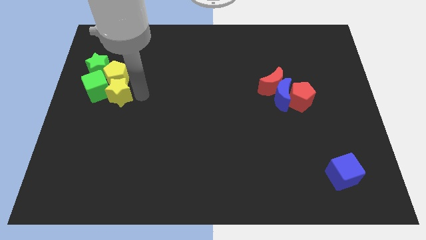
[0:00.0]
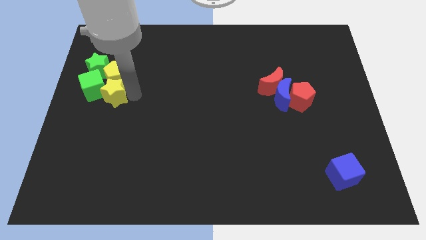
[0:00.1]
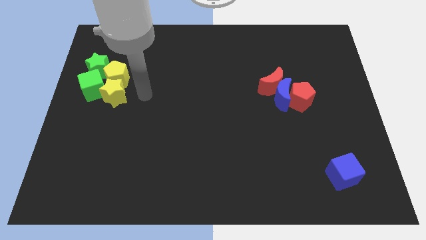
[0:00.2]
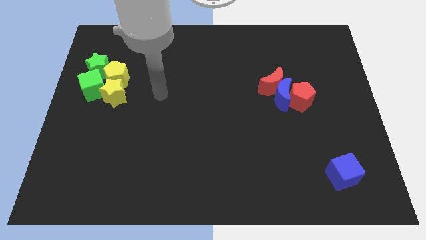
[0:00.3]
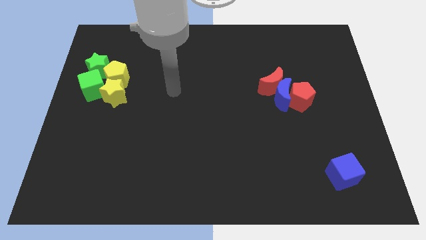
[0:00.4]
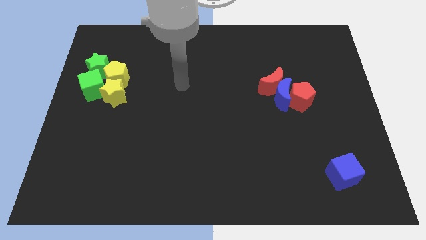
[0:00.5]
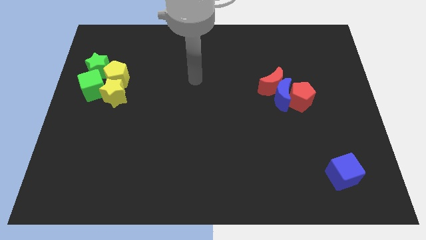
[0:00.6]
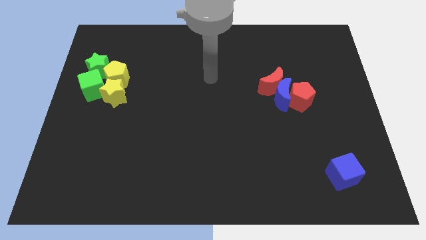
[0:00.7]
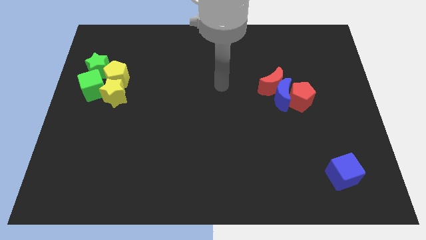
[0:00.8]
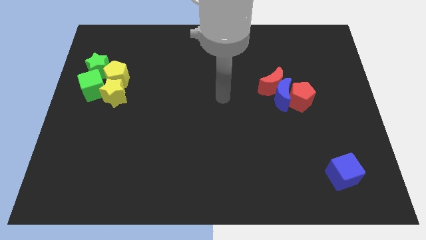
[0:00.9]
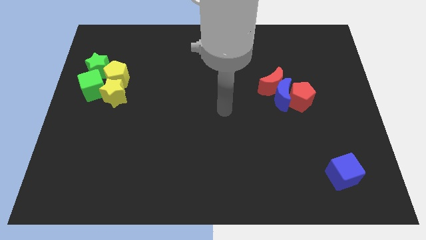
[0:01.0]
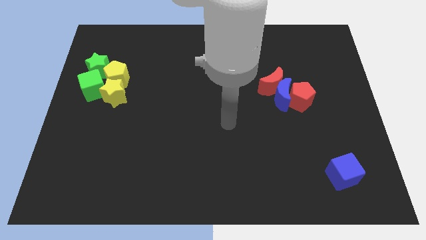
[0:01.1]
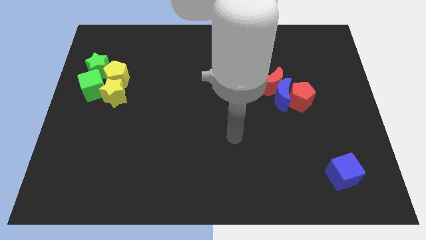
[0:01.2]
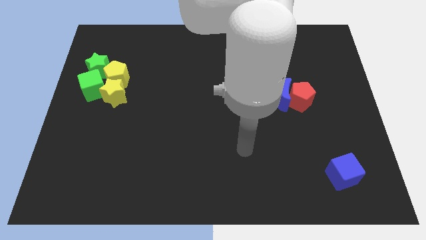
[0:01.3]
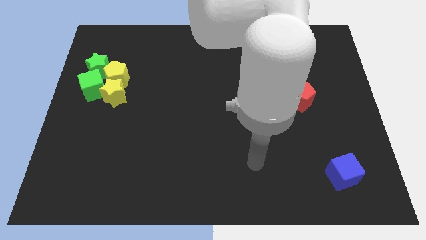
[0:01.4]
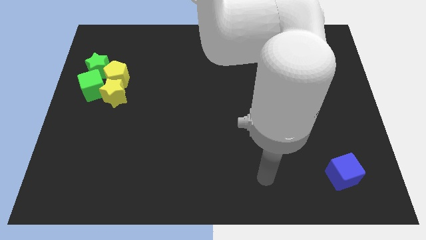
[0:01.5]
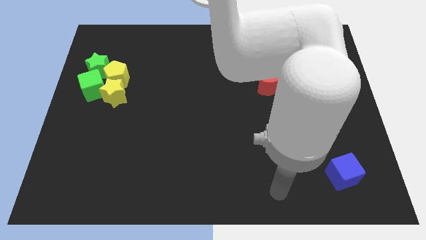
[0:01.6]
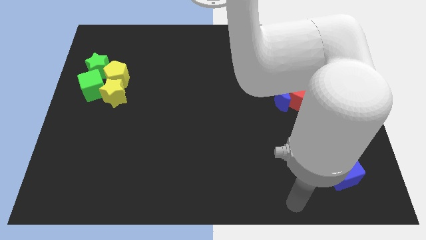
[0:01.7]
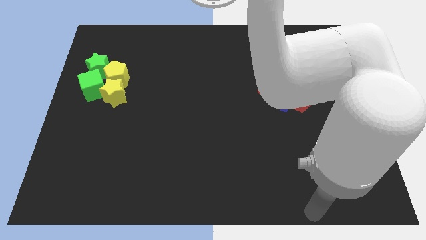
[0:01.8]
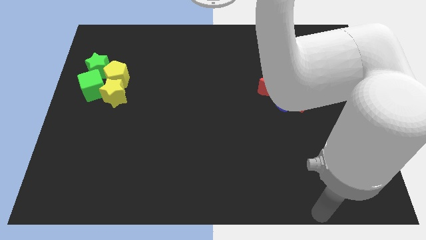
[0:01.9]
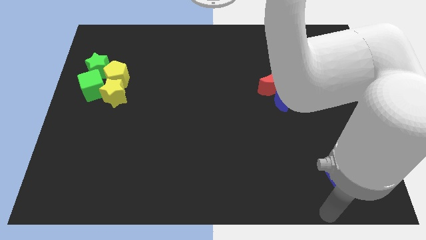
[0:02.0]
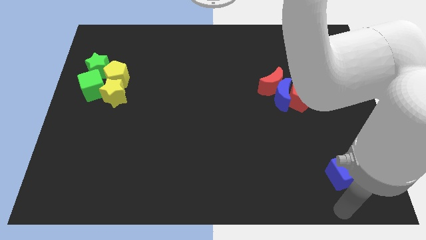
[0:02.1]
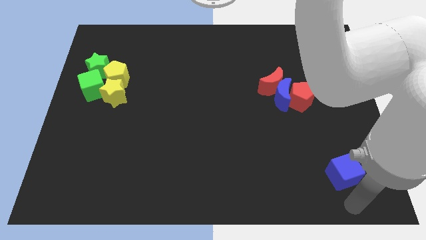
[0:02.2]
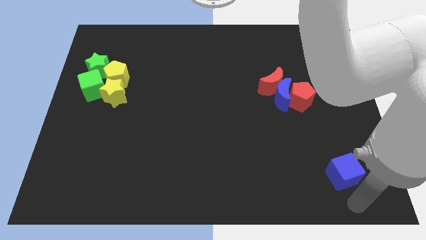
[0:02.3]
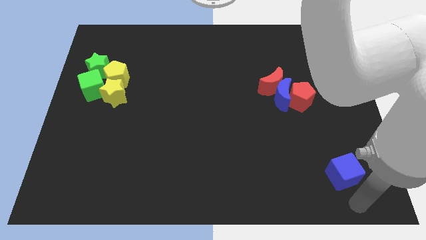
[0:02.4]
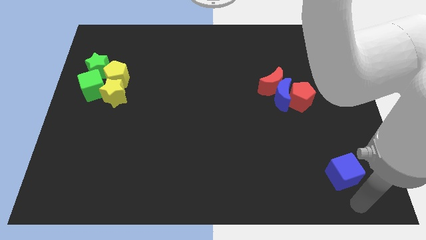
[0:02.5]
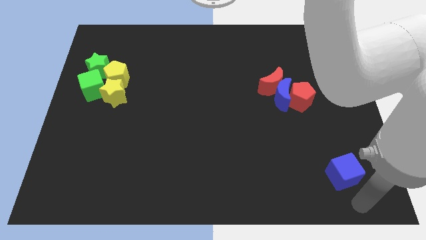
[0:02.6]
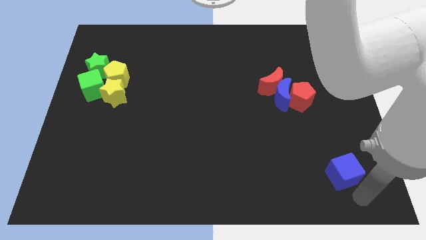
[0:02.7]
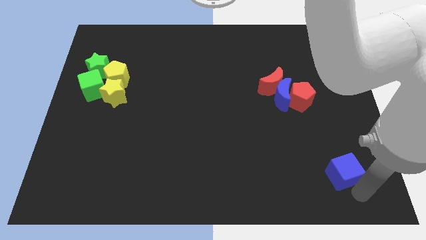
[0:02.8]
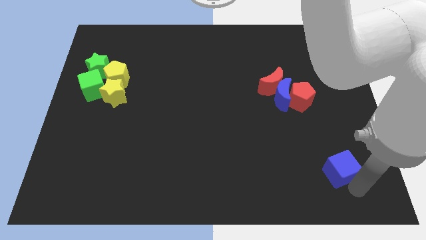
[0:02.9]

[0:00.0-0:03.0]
go near the blue cube

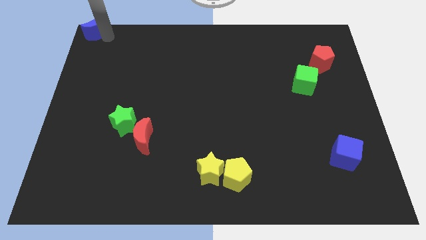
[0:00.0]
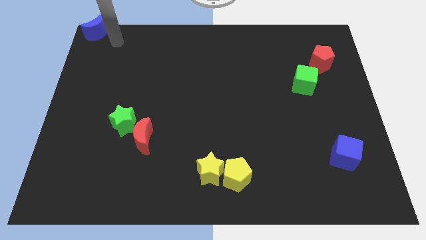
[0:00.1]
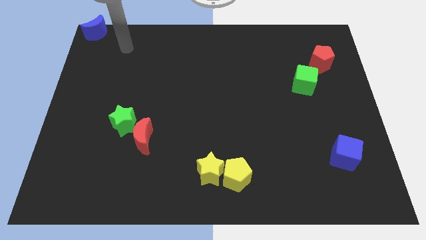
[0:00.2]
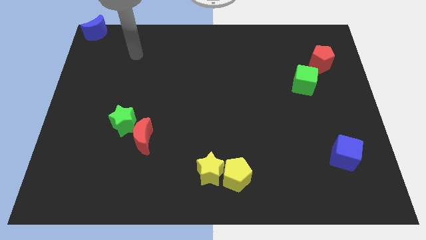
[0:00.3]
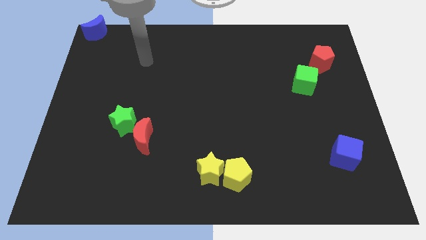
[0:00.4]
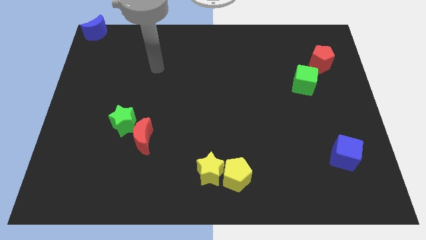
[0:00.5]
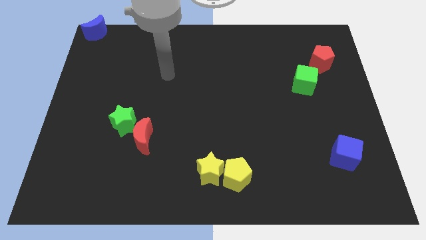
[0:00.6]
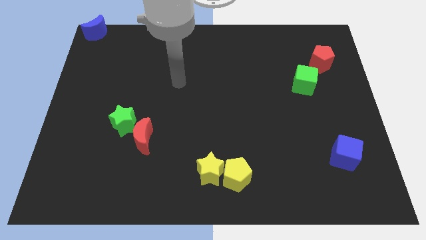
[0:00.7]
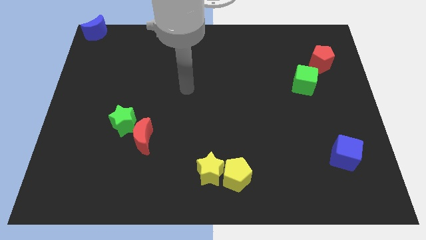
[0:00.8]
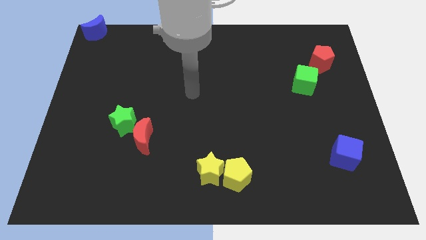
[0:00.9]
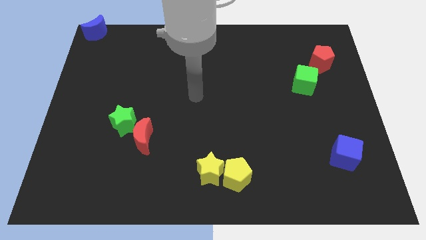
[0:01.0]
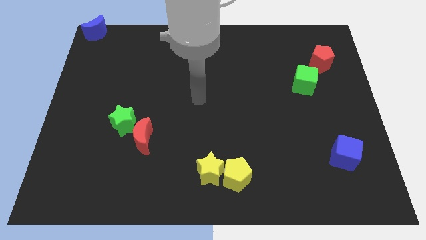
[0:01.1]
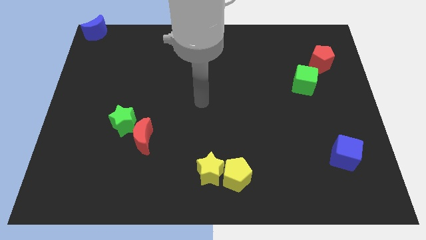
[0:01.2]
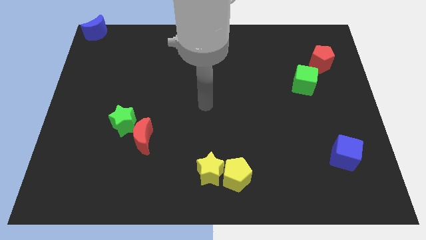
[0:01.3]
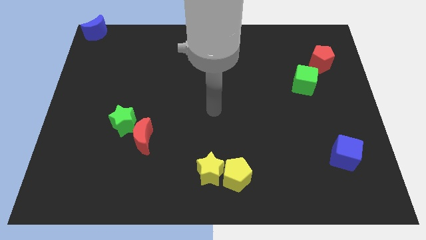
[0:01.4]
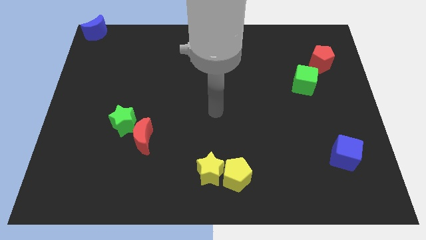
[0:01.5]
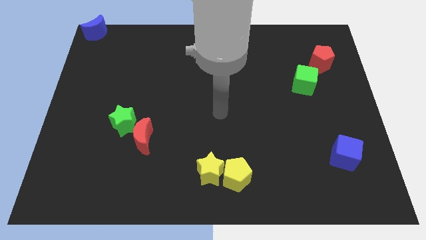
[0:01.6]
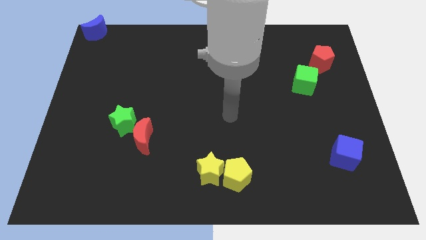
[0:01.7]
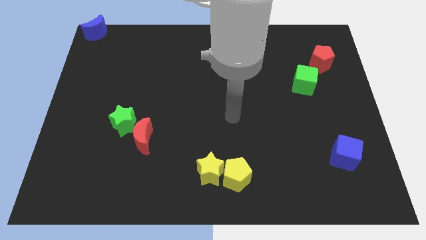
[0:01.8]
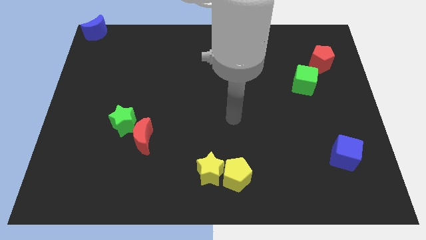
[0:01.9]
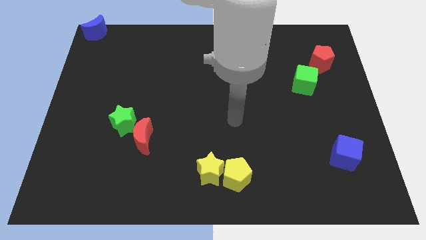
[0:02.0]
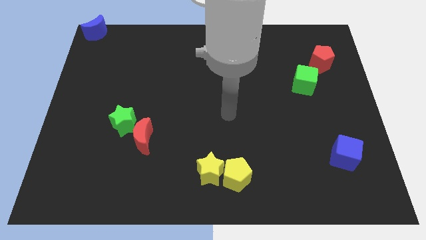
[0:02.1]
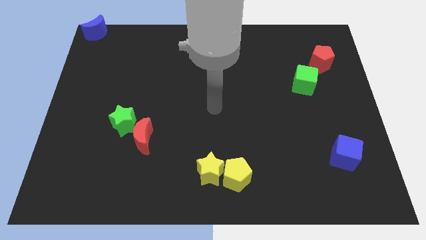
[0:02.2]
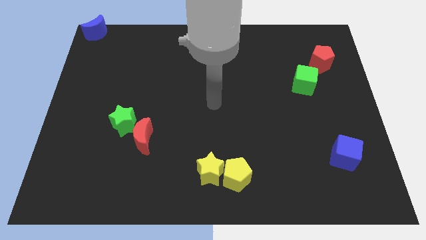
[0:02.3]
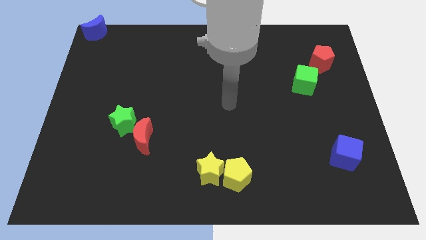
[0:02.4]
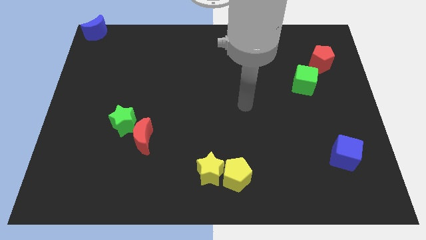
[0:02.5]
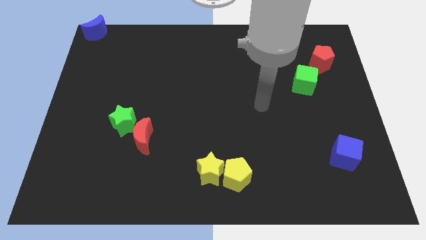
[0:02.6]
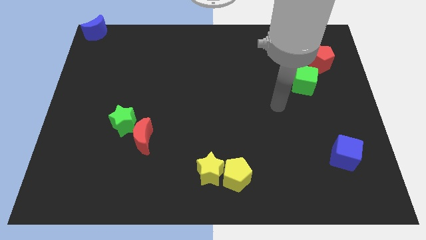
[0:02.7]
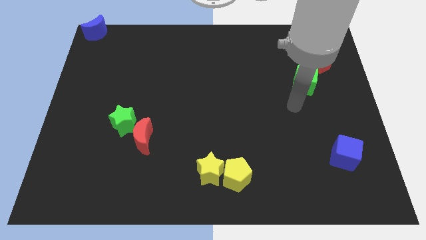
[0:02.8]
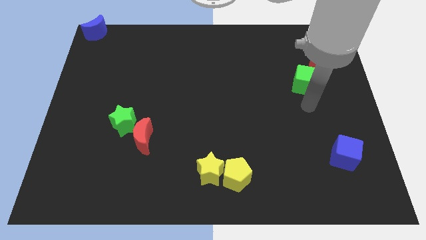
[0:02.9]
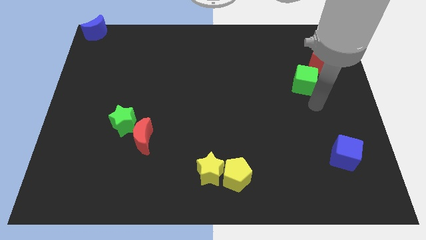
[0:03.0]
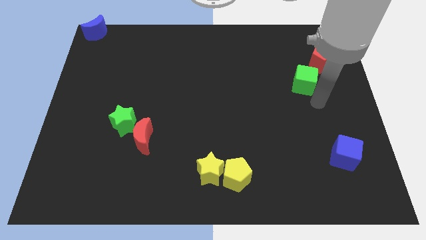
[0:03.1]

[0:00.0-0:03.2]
go near to the green cube

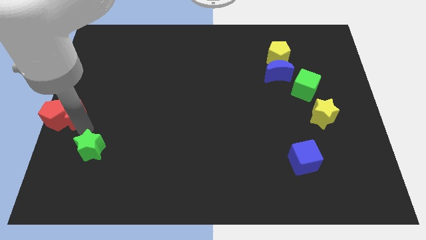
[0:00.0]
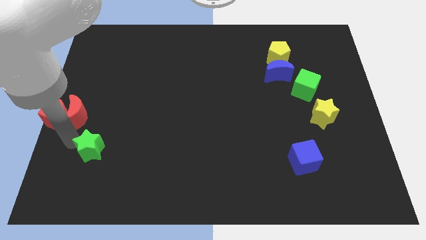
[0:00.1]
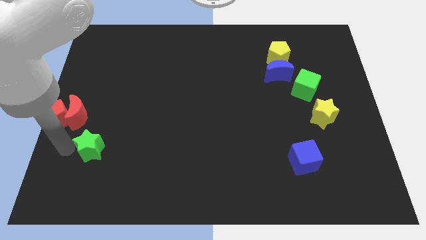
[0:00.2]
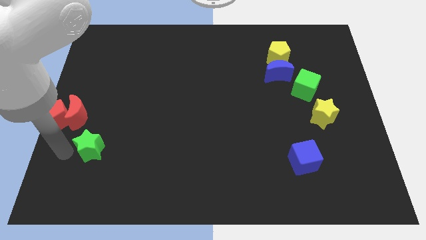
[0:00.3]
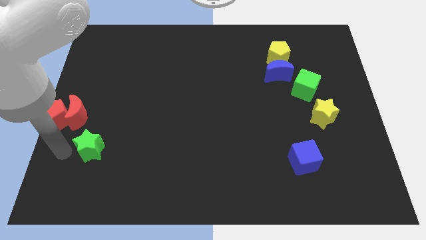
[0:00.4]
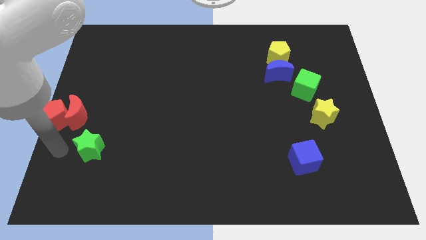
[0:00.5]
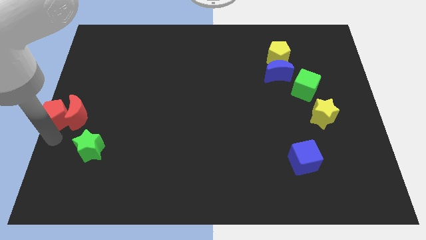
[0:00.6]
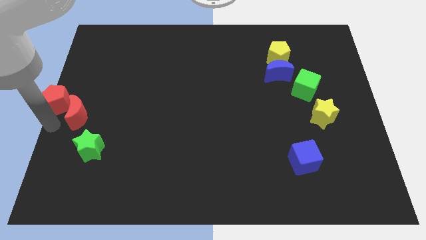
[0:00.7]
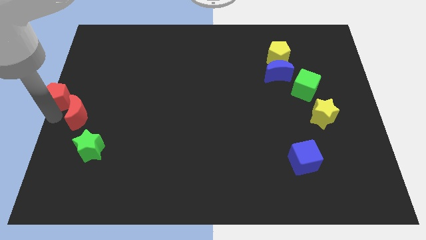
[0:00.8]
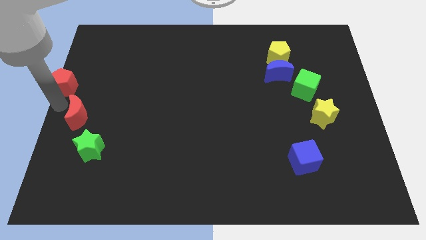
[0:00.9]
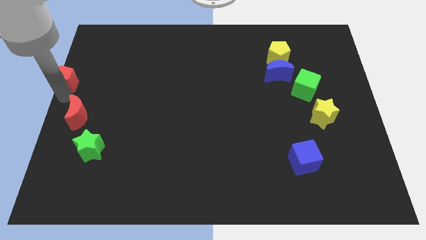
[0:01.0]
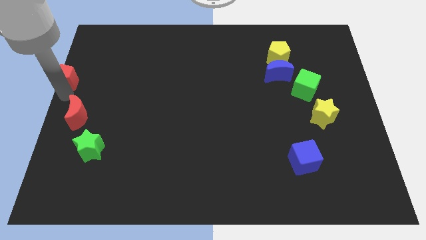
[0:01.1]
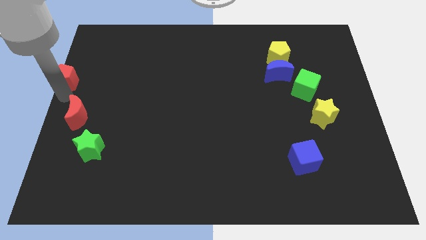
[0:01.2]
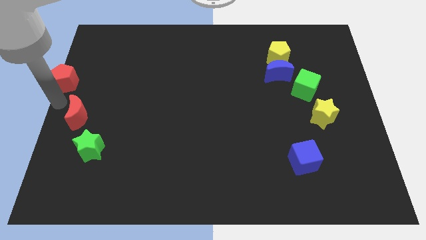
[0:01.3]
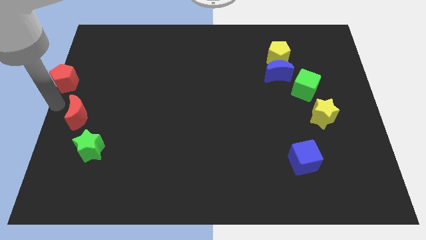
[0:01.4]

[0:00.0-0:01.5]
separate the red pentagon from the red crescent

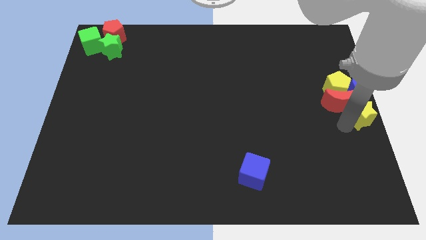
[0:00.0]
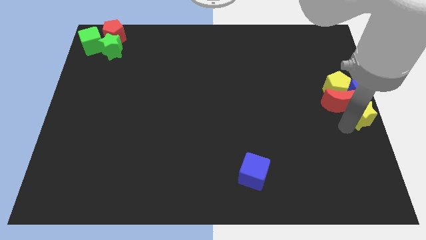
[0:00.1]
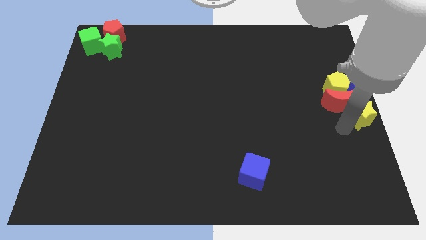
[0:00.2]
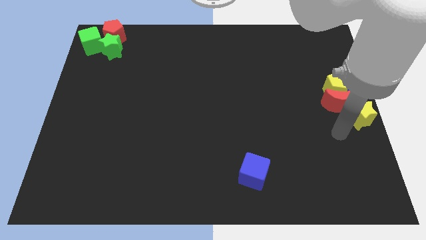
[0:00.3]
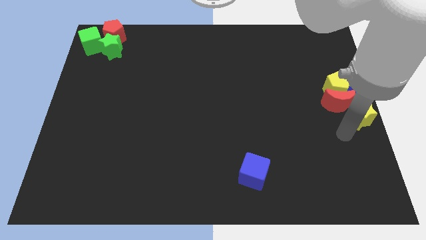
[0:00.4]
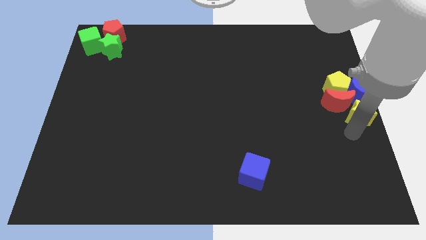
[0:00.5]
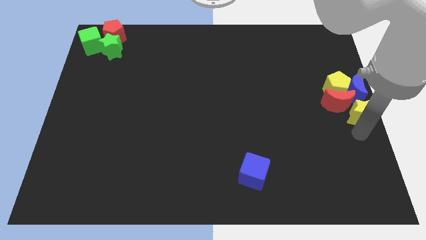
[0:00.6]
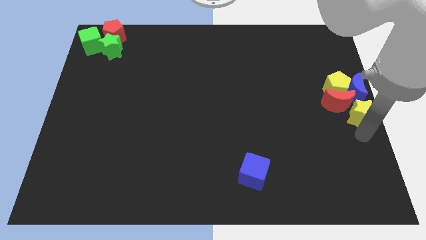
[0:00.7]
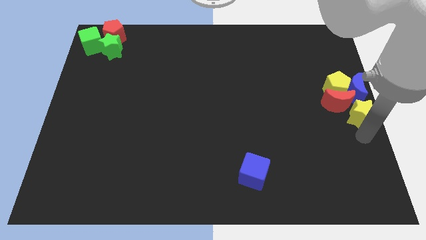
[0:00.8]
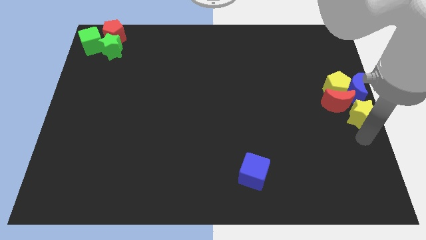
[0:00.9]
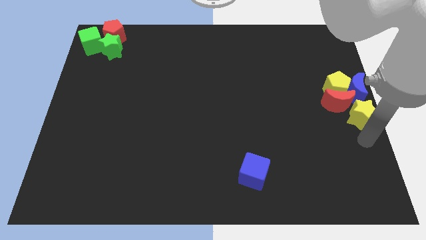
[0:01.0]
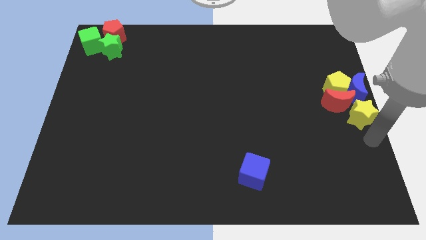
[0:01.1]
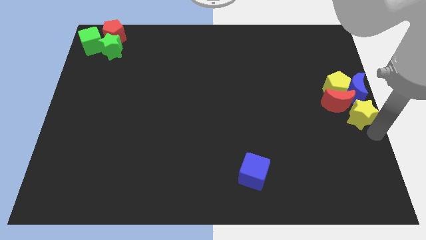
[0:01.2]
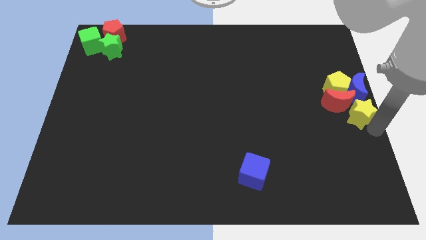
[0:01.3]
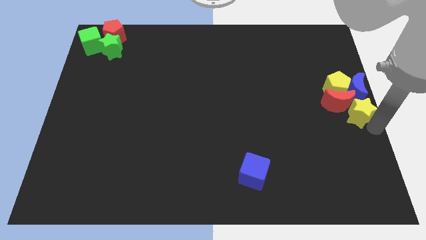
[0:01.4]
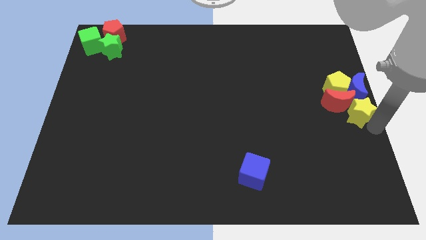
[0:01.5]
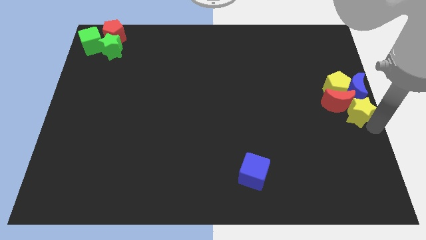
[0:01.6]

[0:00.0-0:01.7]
slightly push the yellow star into the group of blocks
